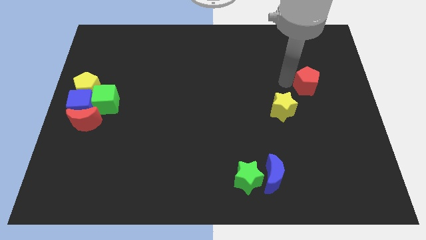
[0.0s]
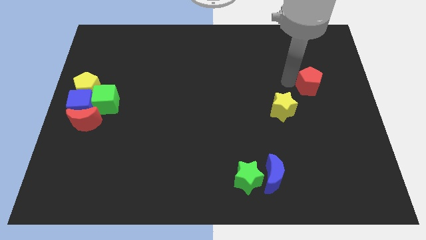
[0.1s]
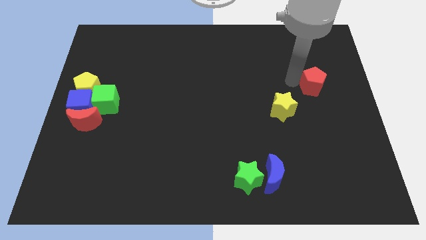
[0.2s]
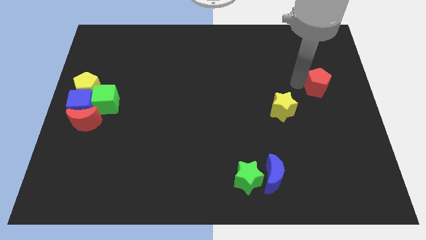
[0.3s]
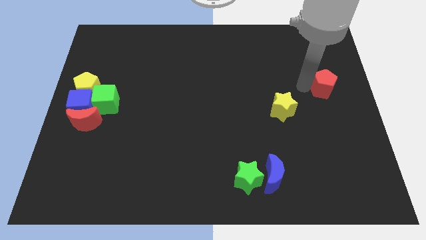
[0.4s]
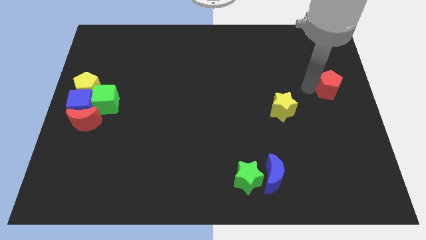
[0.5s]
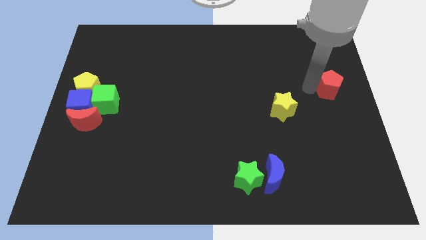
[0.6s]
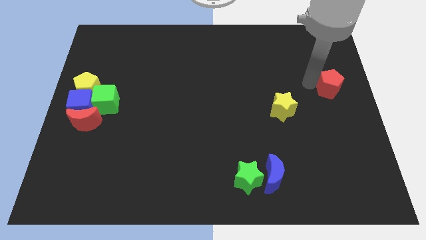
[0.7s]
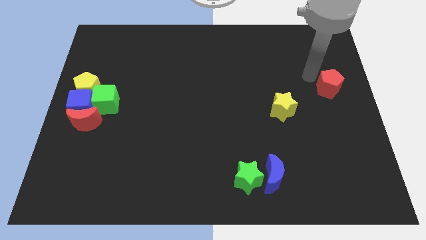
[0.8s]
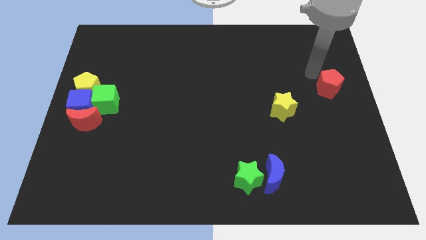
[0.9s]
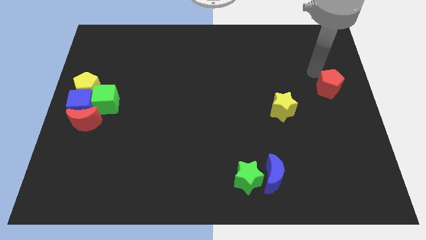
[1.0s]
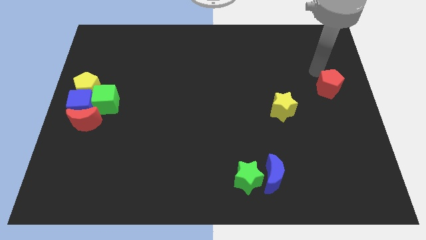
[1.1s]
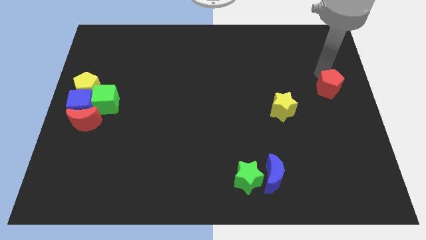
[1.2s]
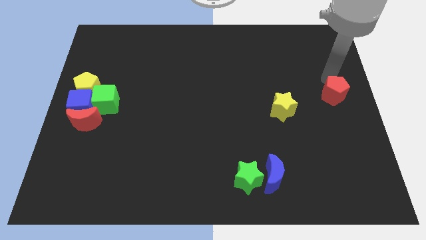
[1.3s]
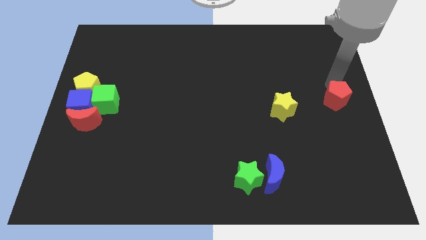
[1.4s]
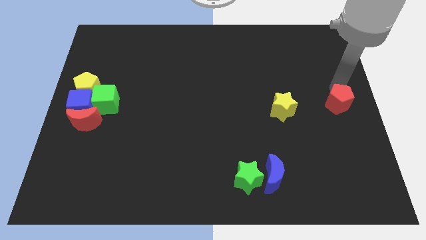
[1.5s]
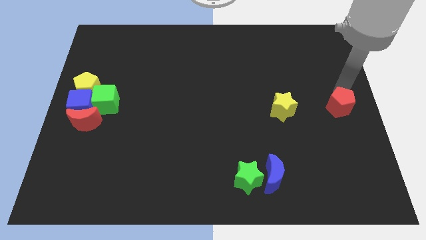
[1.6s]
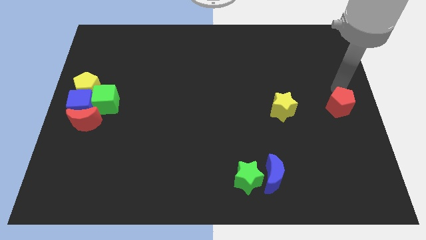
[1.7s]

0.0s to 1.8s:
place the red pentagon to the right of yellow star

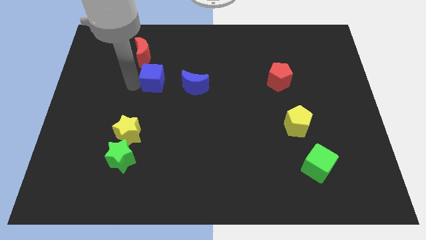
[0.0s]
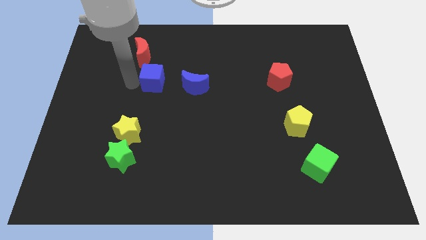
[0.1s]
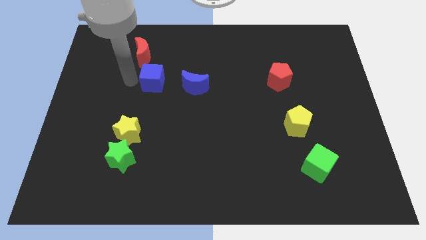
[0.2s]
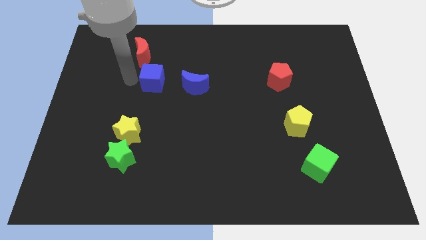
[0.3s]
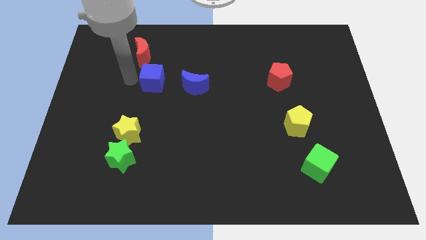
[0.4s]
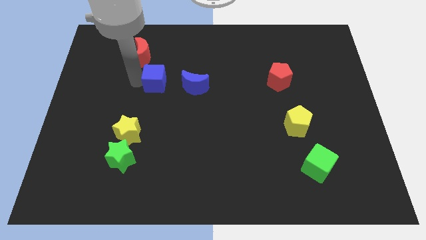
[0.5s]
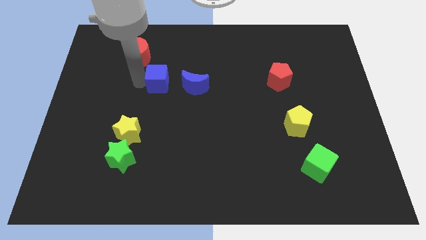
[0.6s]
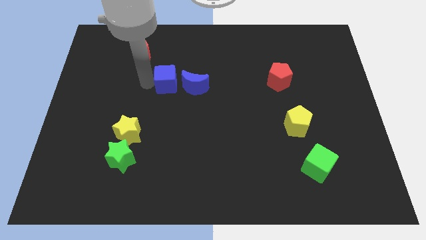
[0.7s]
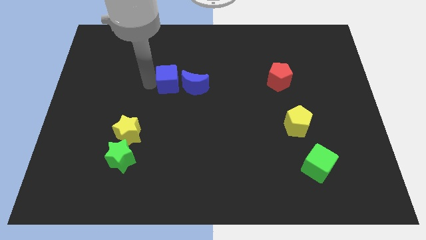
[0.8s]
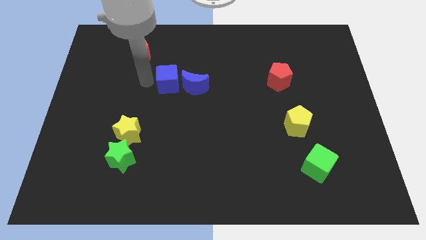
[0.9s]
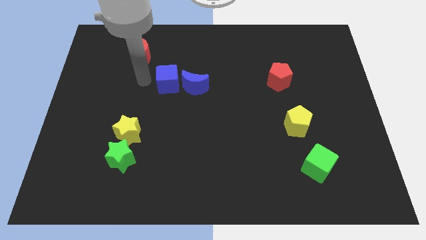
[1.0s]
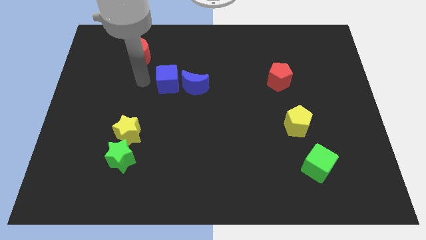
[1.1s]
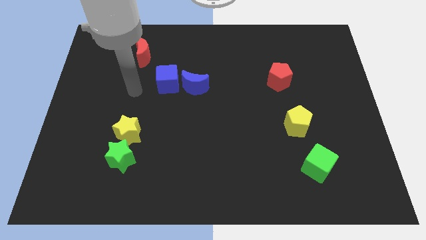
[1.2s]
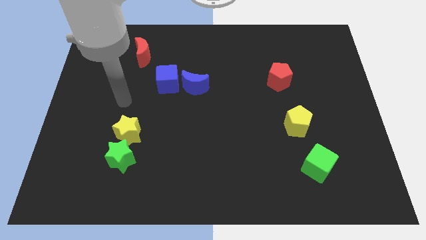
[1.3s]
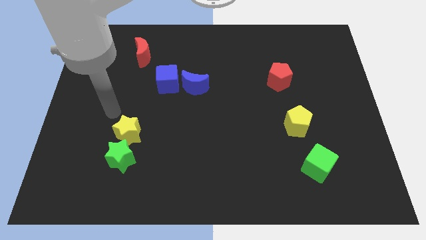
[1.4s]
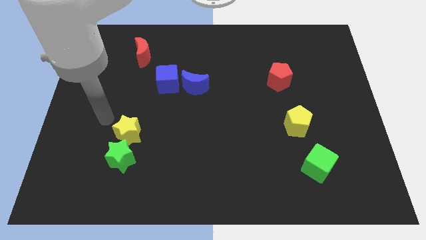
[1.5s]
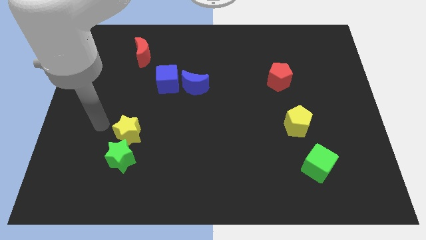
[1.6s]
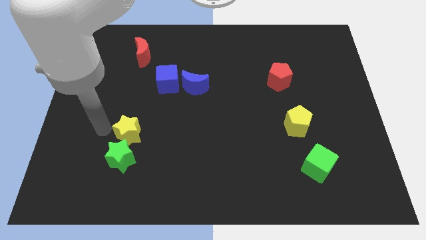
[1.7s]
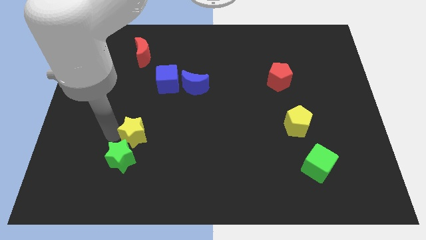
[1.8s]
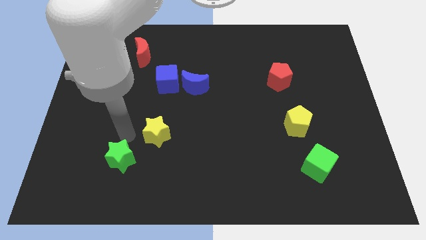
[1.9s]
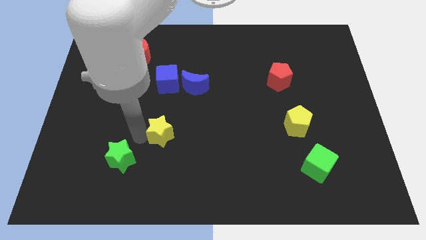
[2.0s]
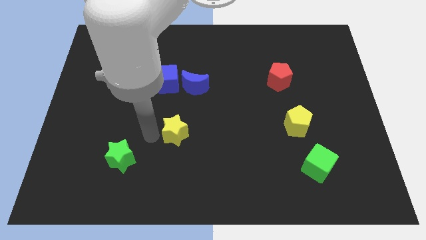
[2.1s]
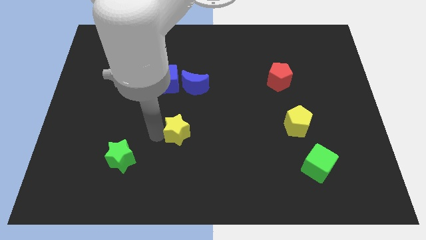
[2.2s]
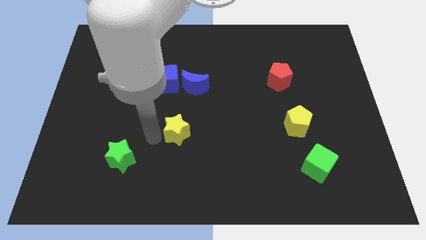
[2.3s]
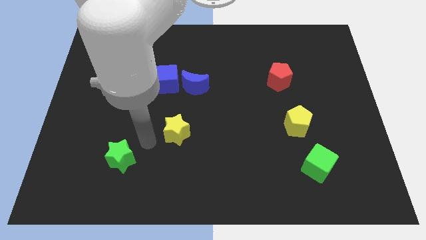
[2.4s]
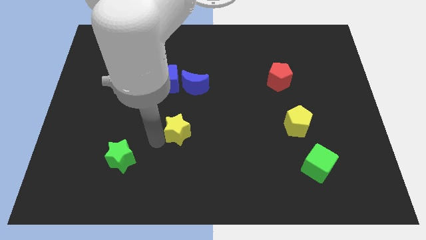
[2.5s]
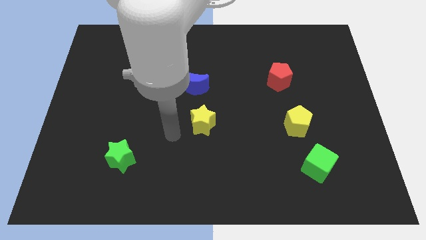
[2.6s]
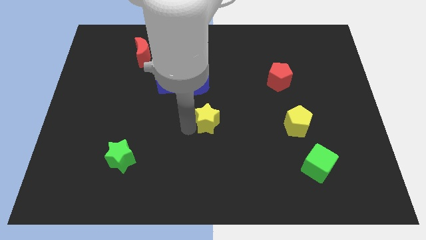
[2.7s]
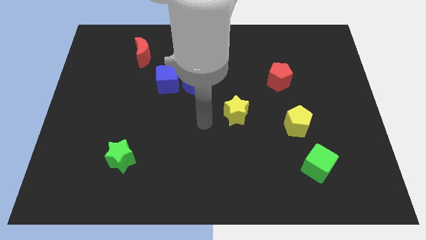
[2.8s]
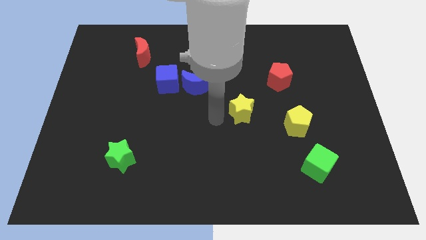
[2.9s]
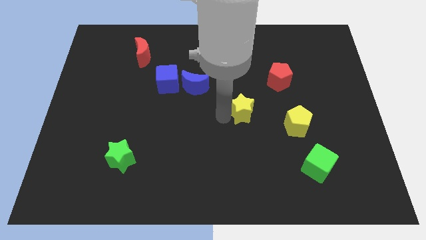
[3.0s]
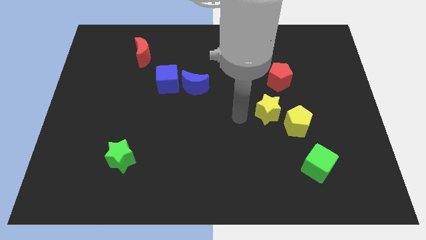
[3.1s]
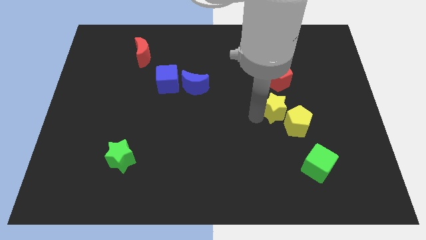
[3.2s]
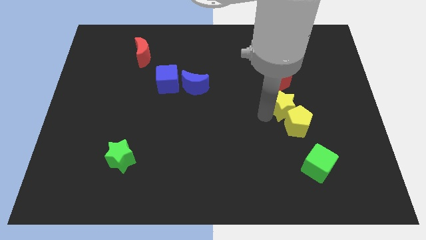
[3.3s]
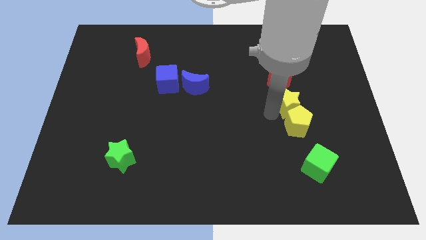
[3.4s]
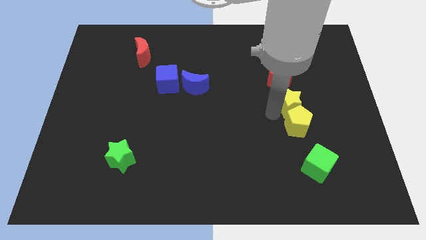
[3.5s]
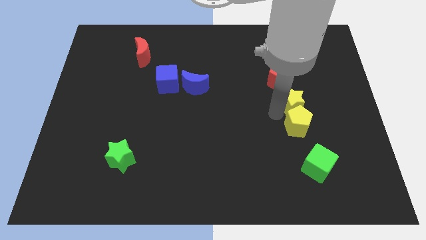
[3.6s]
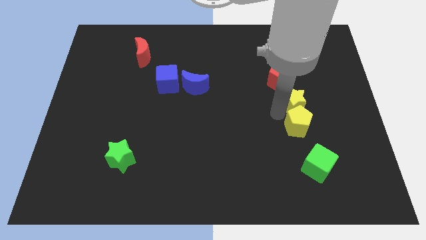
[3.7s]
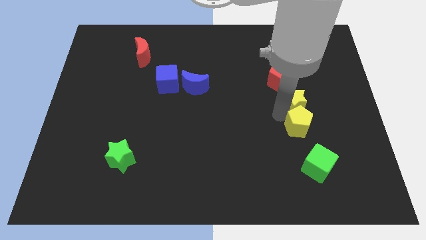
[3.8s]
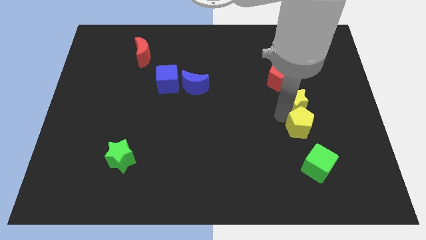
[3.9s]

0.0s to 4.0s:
place the yellow star between the yellow pentagon and red pentagon

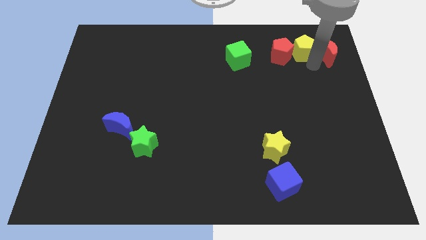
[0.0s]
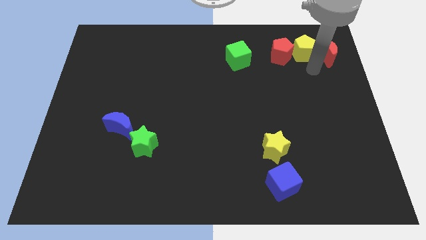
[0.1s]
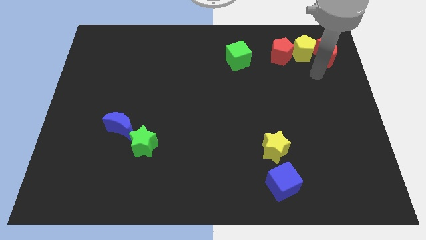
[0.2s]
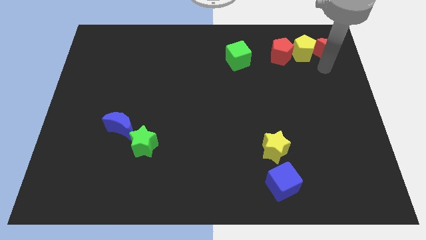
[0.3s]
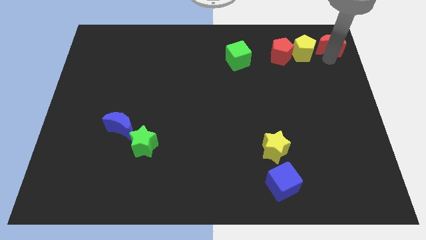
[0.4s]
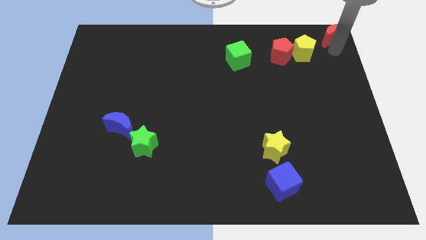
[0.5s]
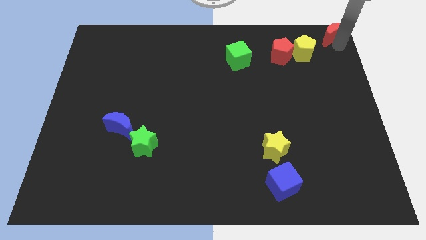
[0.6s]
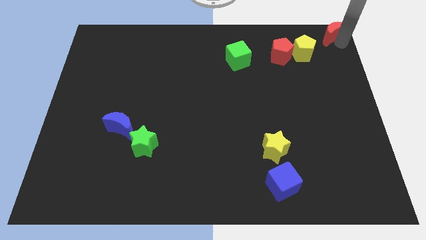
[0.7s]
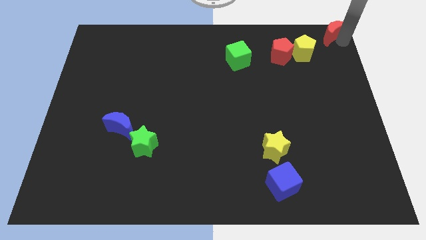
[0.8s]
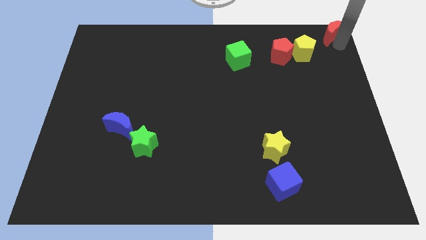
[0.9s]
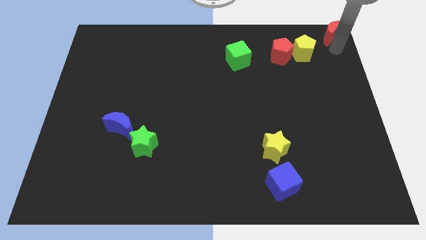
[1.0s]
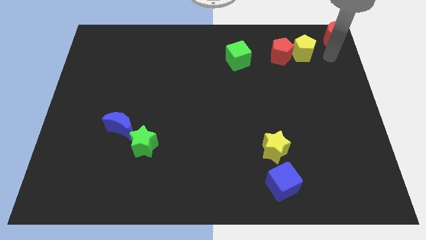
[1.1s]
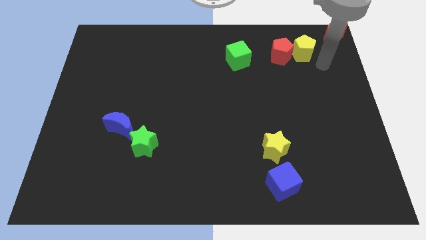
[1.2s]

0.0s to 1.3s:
move the red crescent to the top right corner of the board

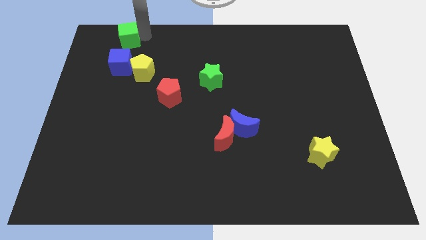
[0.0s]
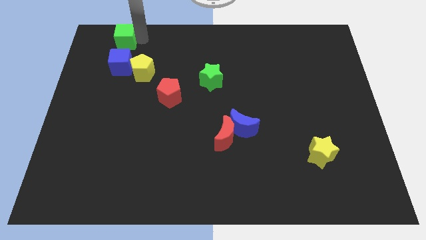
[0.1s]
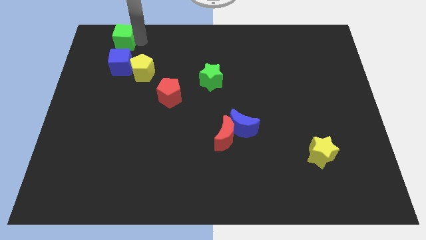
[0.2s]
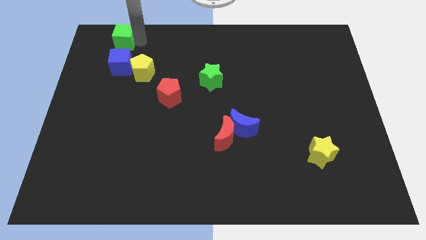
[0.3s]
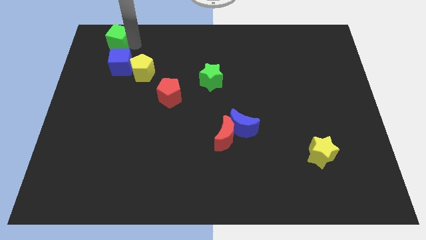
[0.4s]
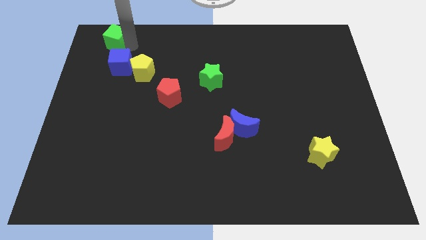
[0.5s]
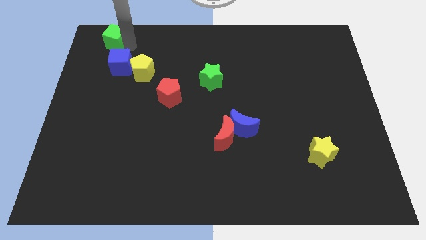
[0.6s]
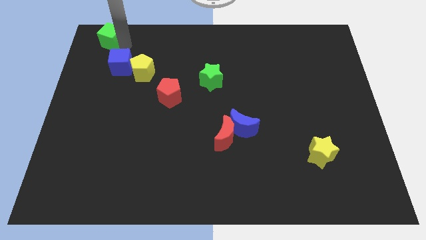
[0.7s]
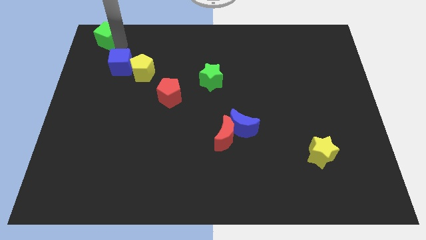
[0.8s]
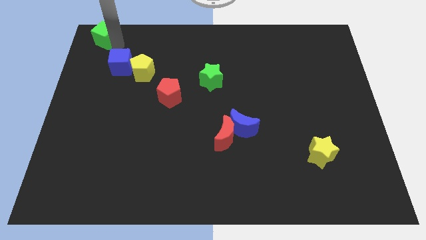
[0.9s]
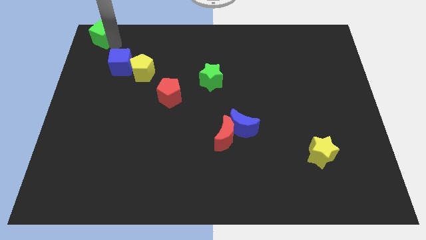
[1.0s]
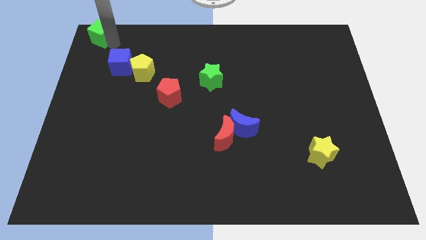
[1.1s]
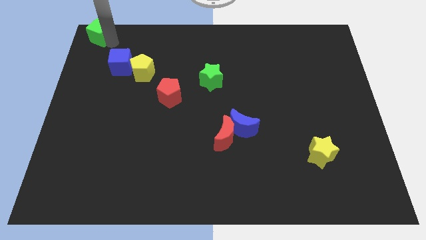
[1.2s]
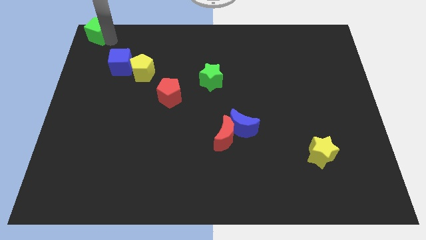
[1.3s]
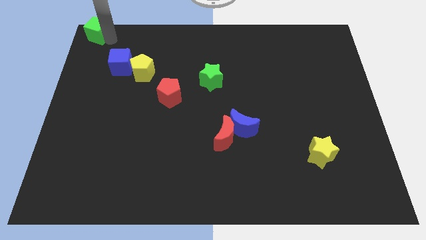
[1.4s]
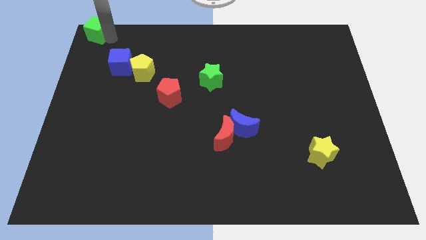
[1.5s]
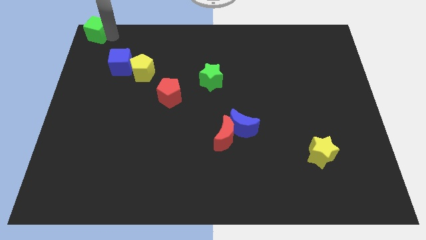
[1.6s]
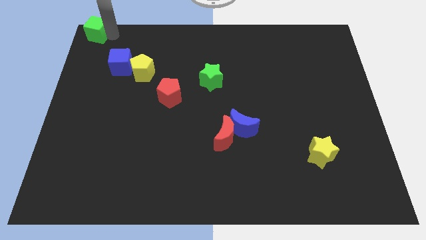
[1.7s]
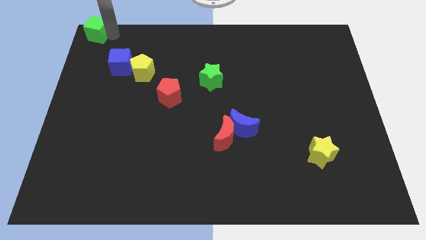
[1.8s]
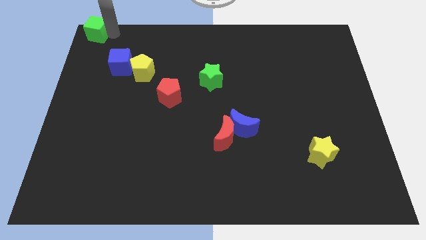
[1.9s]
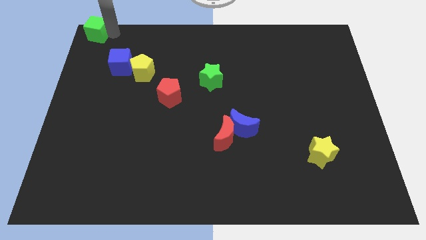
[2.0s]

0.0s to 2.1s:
push the green cube to the top left
